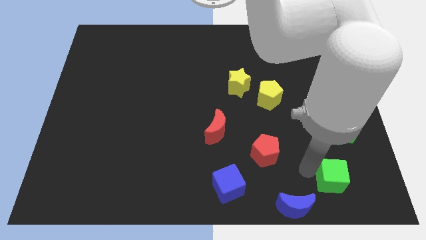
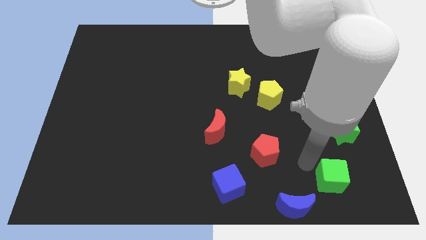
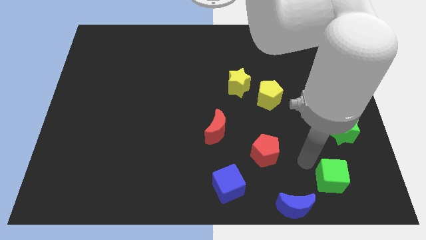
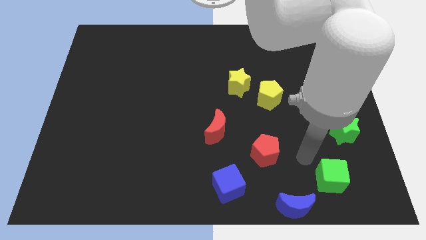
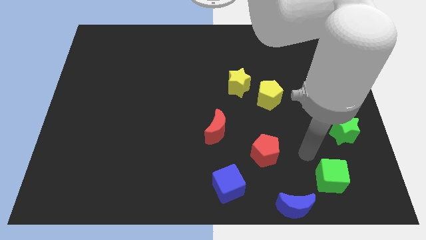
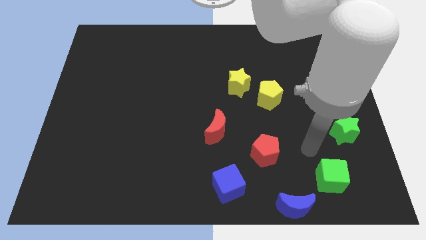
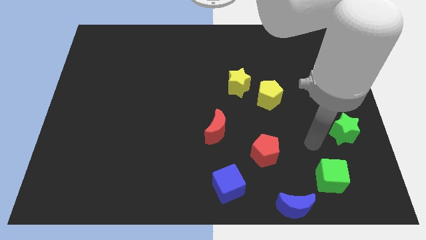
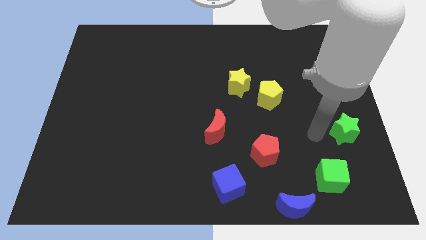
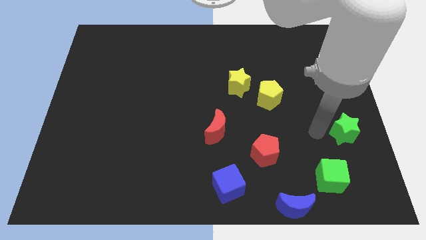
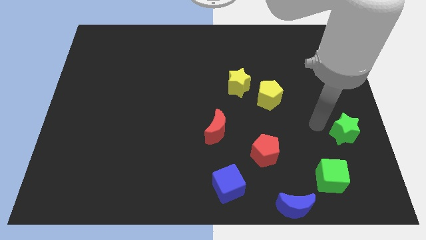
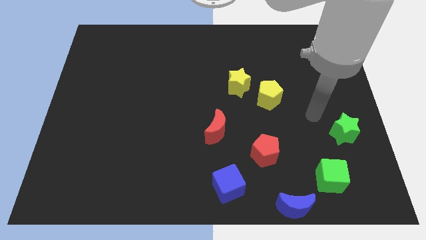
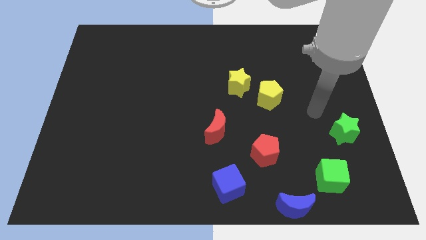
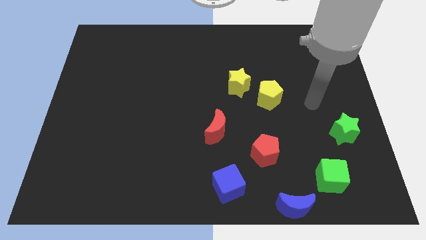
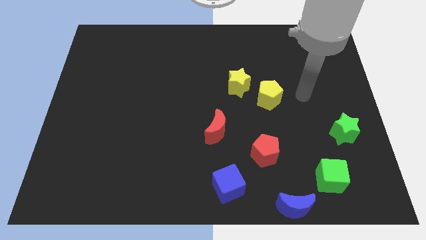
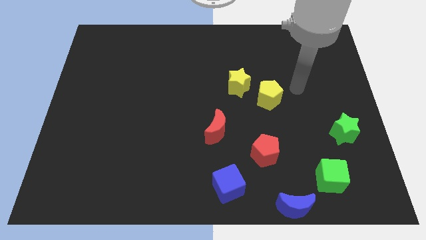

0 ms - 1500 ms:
go away from the green cube

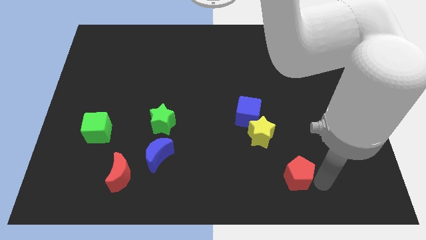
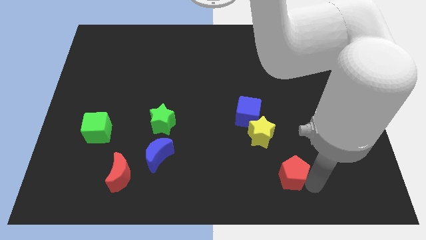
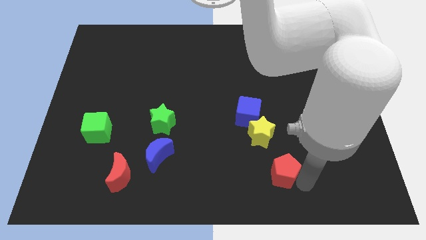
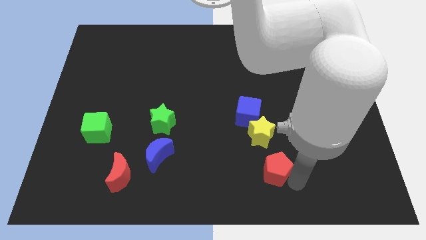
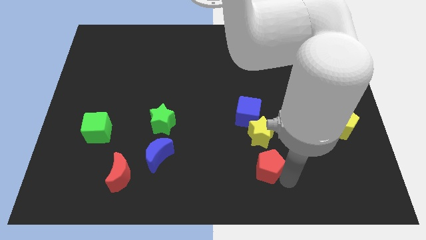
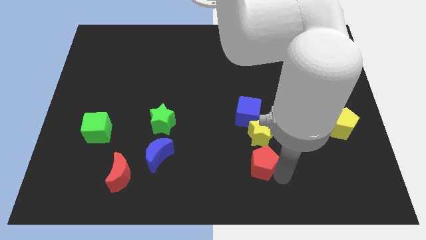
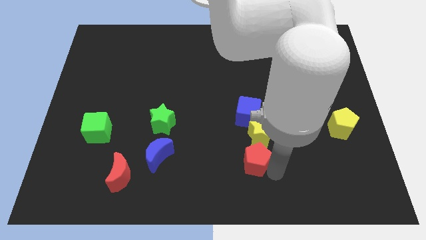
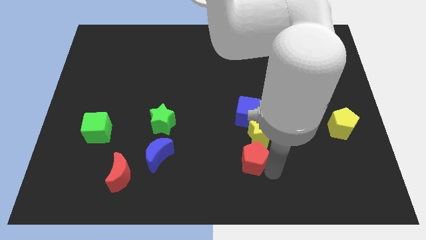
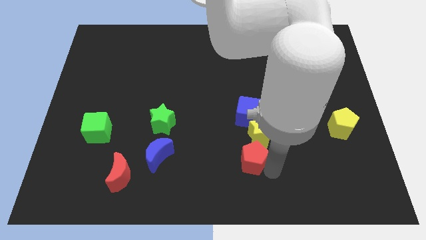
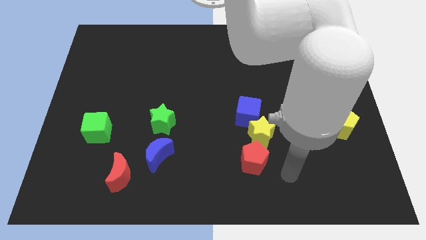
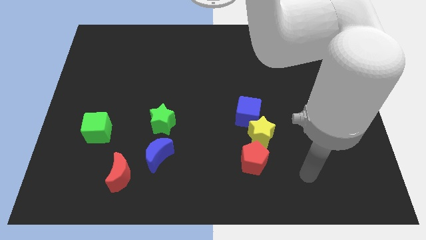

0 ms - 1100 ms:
move the red pentagon bottom to the yellow star

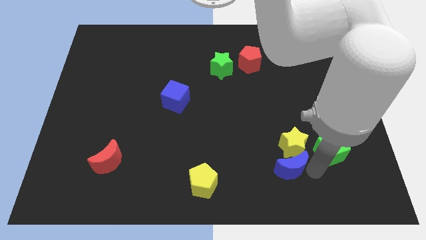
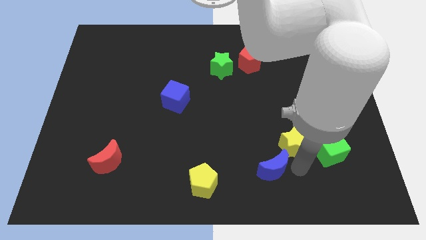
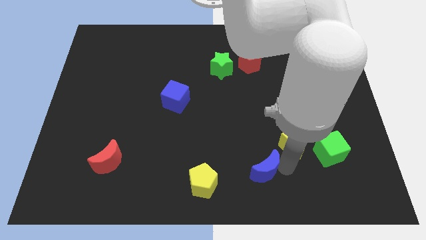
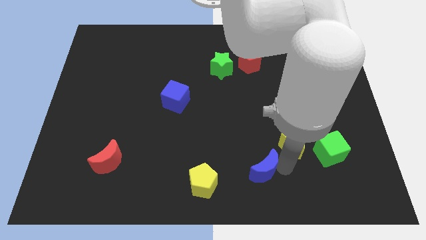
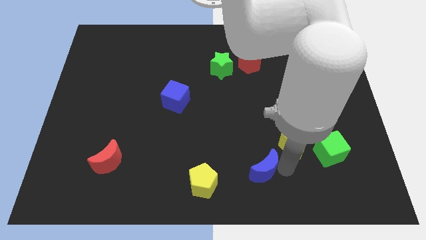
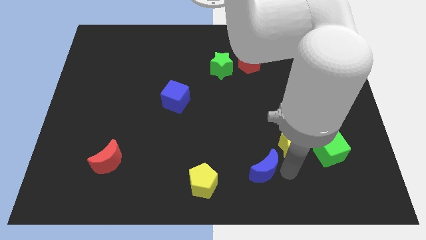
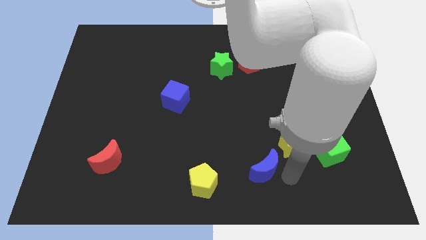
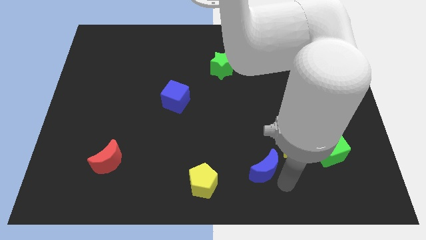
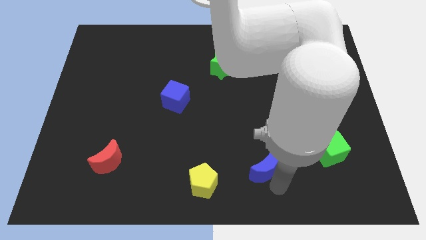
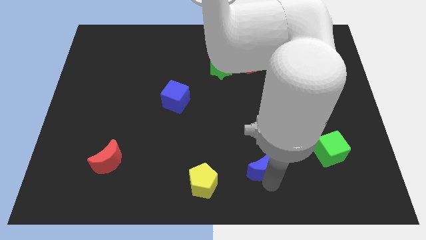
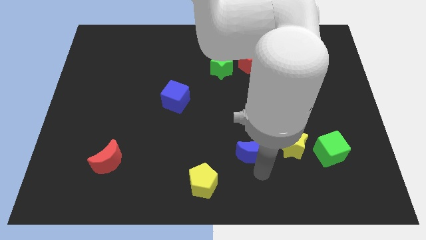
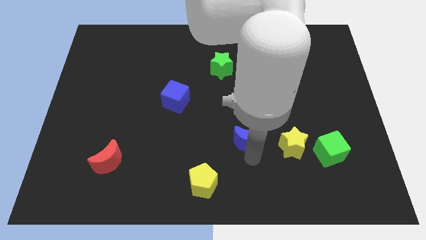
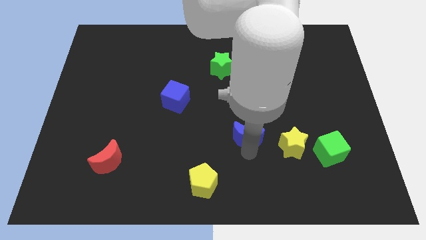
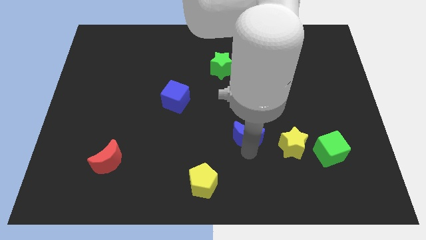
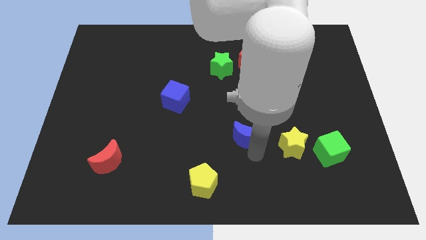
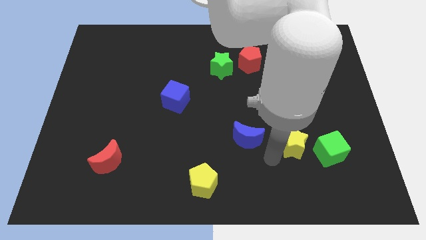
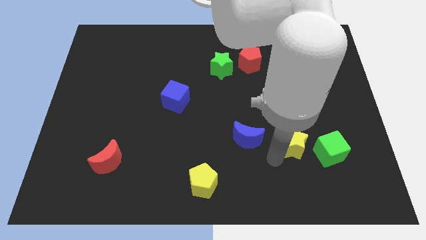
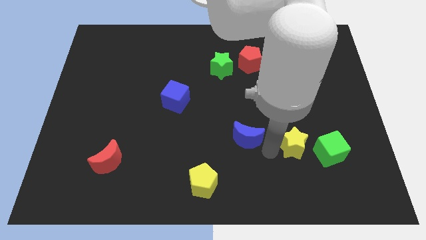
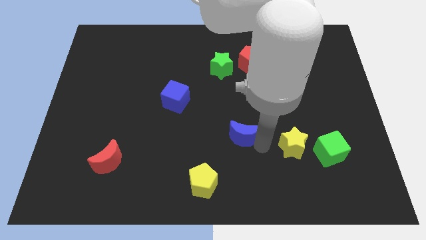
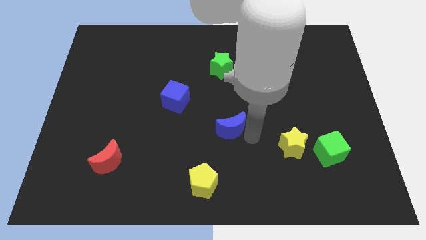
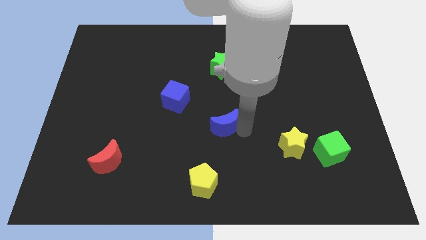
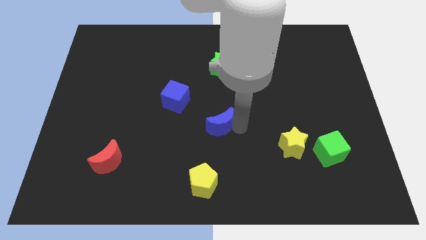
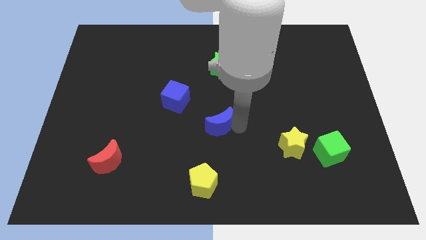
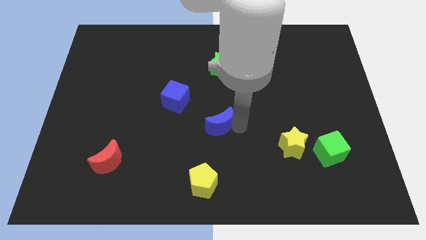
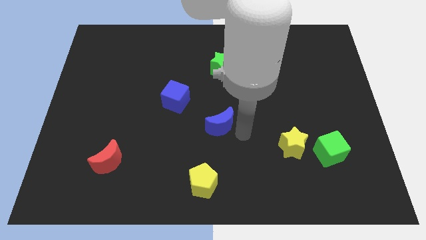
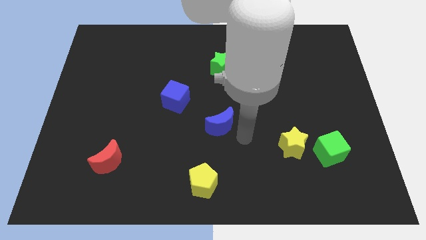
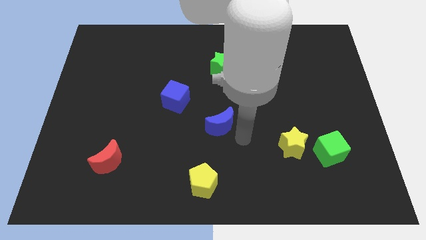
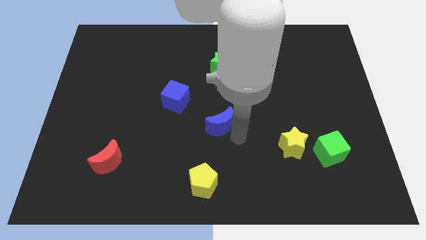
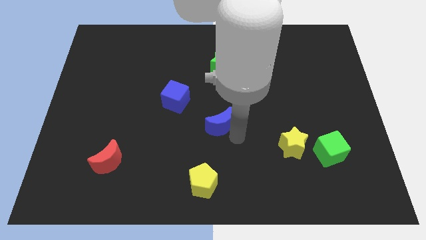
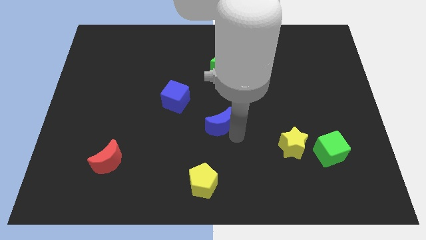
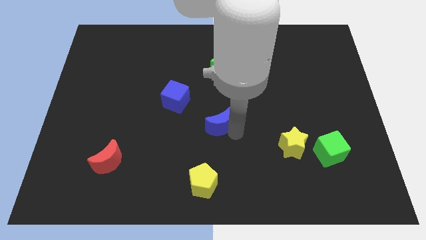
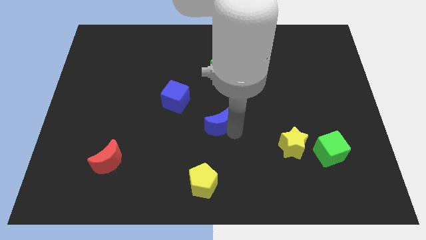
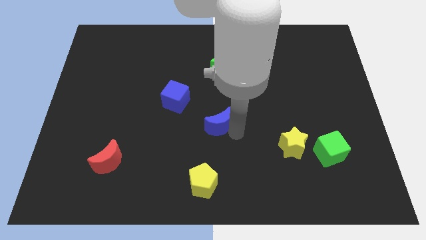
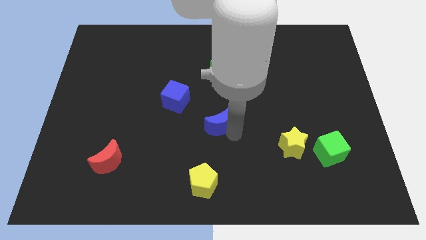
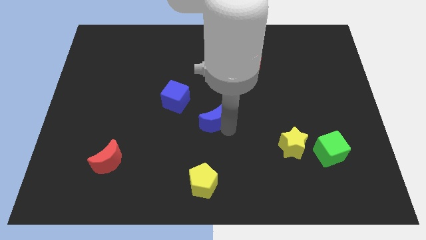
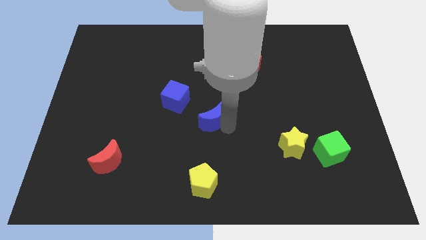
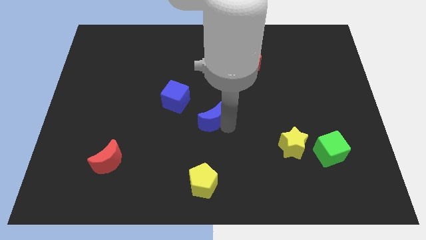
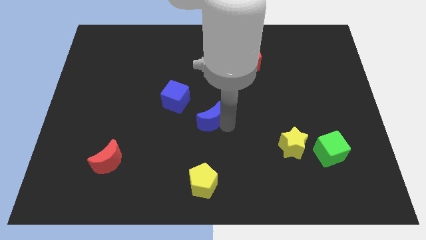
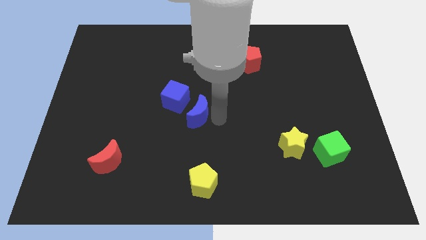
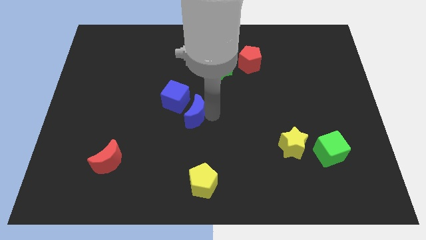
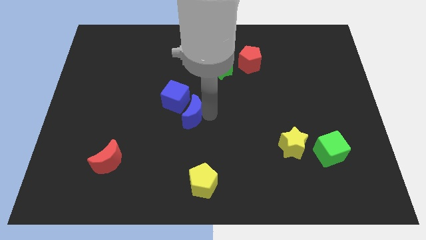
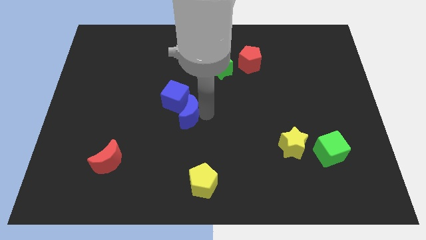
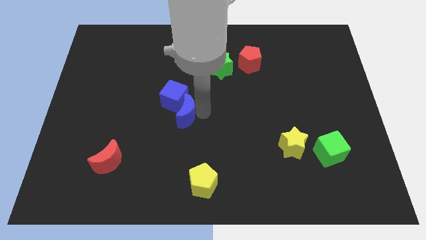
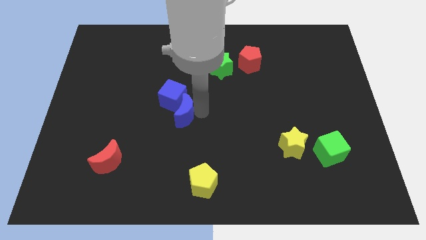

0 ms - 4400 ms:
push the blue crescent into the bottom of the blue cube

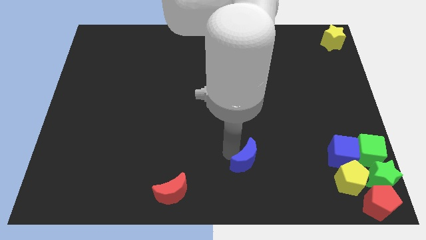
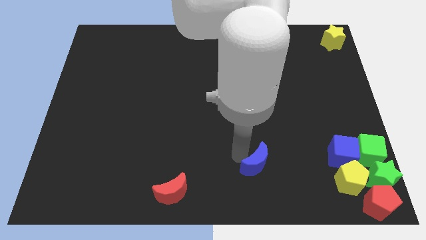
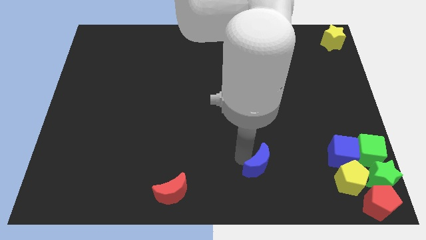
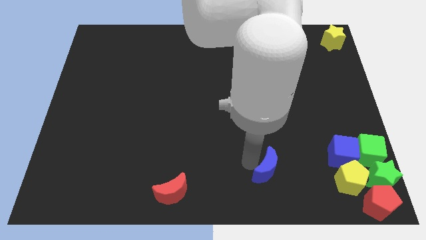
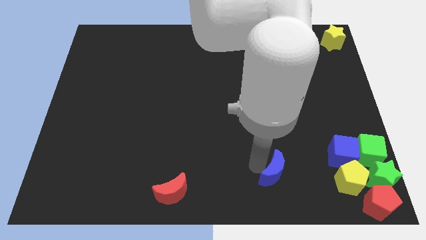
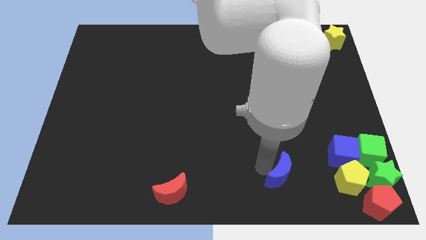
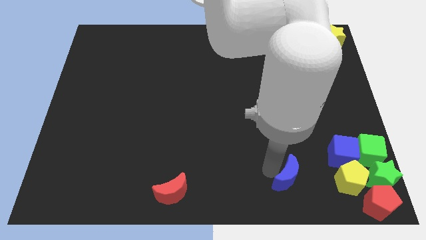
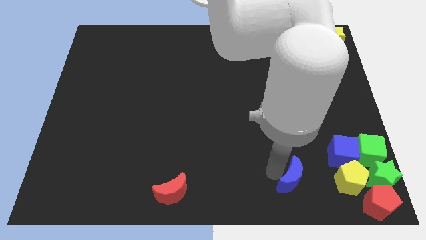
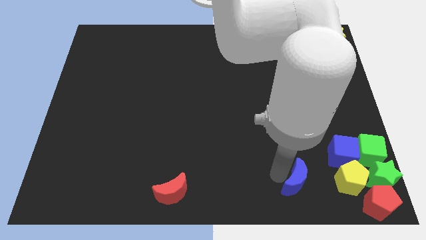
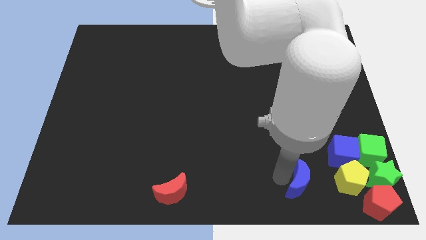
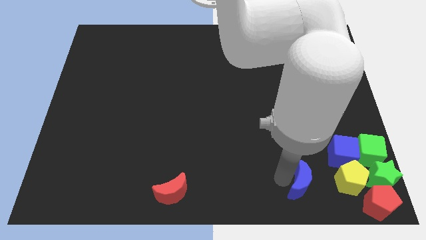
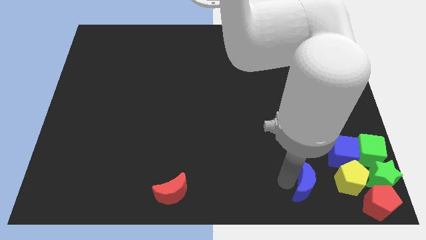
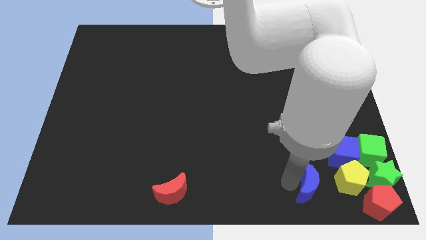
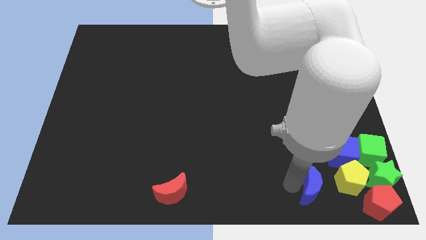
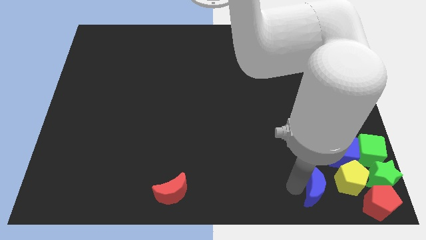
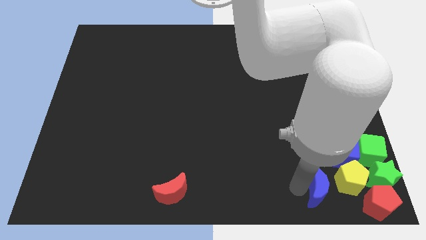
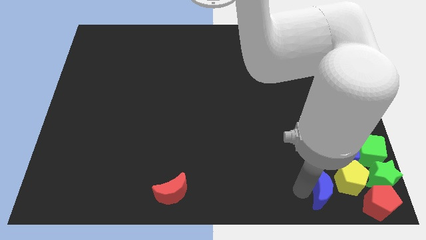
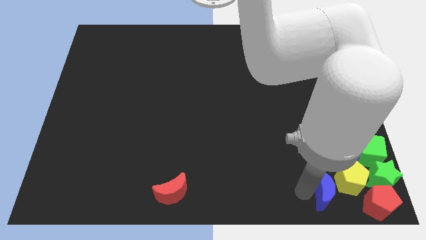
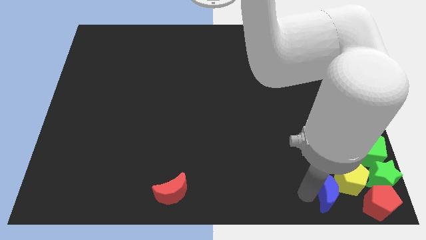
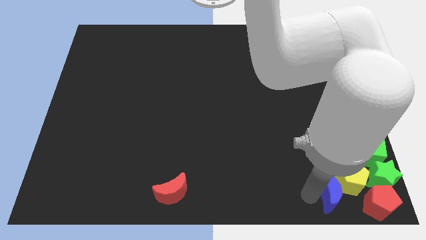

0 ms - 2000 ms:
place the blue moon at the bottom left of the yellow pentagon
